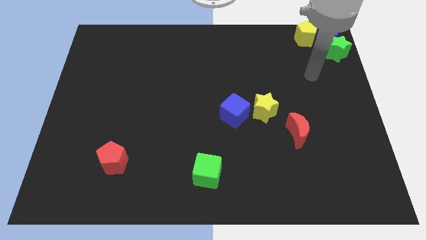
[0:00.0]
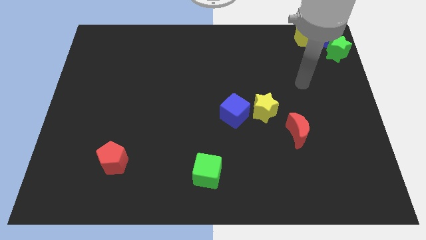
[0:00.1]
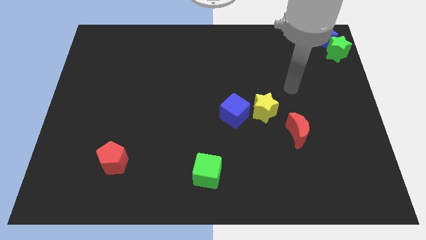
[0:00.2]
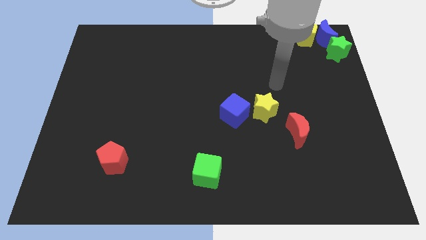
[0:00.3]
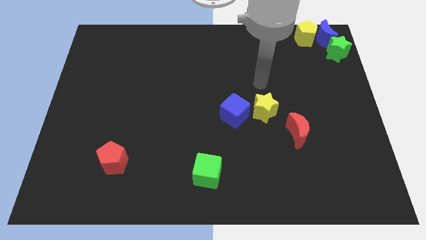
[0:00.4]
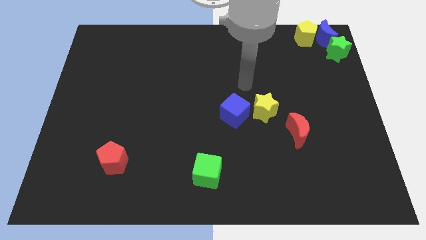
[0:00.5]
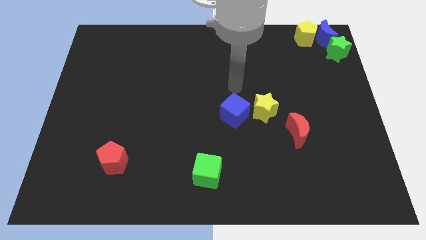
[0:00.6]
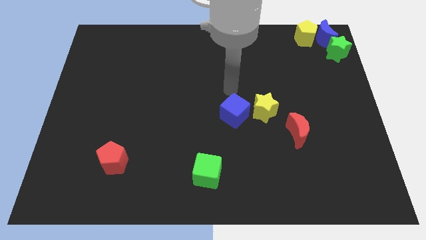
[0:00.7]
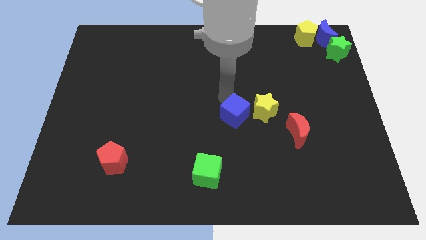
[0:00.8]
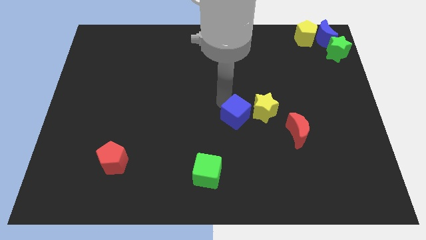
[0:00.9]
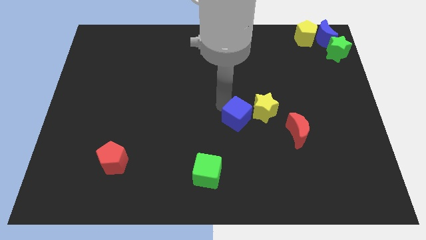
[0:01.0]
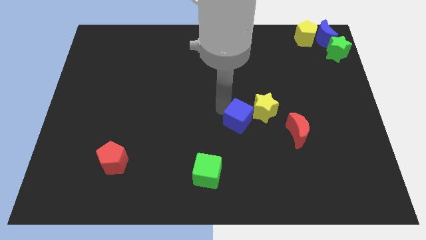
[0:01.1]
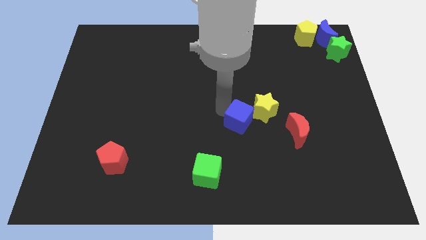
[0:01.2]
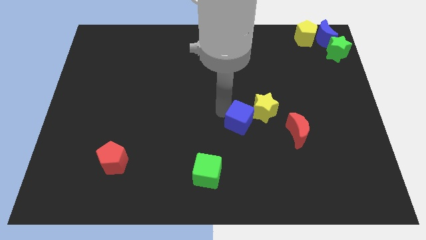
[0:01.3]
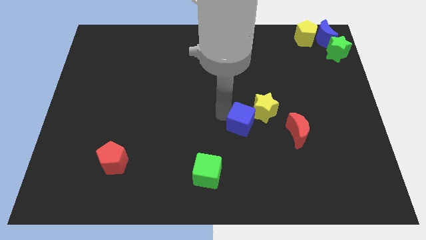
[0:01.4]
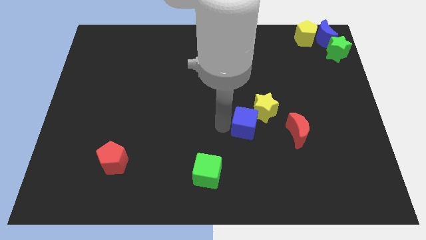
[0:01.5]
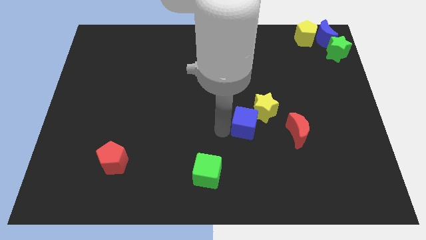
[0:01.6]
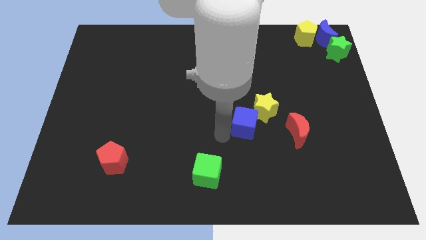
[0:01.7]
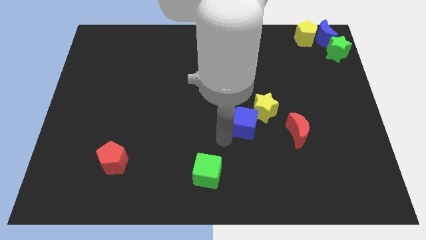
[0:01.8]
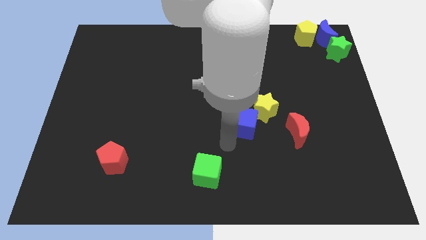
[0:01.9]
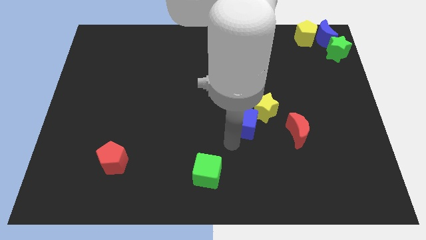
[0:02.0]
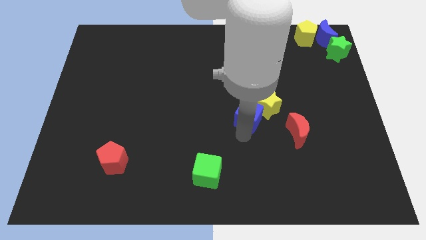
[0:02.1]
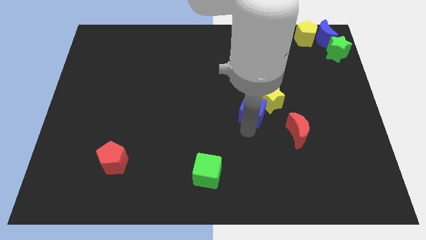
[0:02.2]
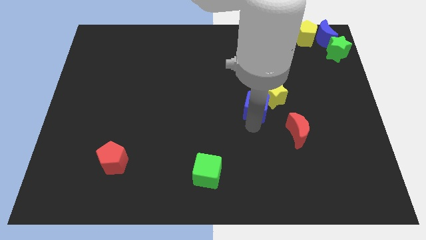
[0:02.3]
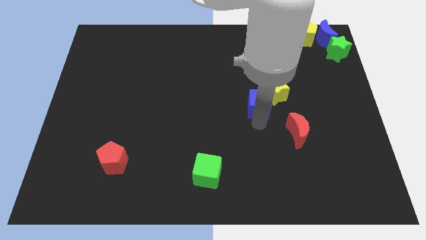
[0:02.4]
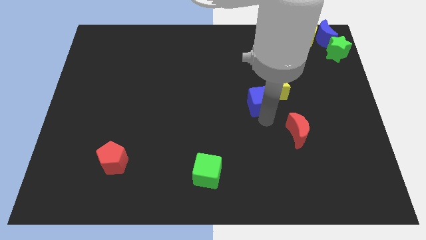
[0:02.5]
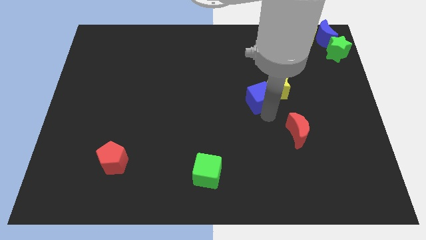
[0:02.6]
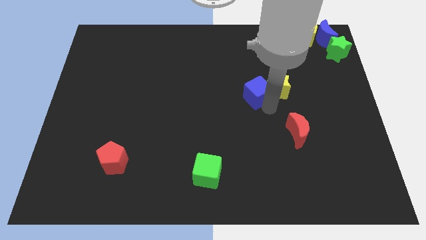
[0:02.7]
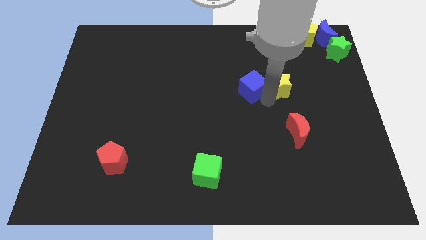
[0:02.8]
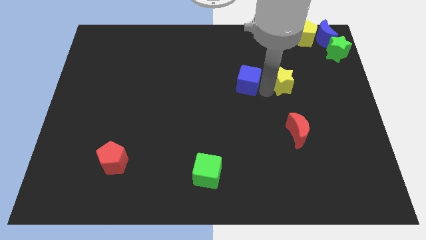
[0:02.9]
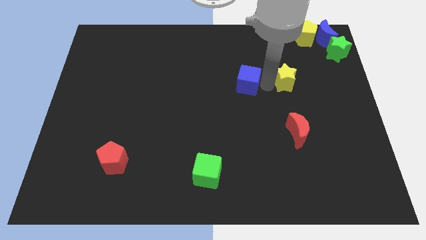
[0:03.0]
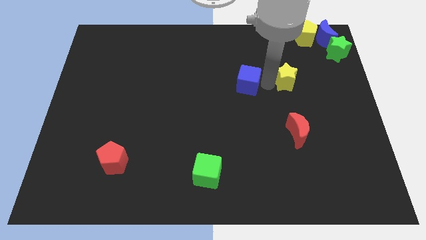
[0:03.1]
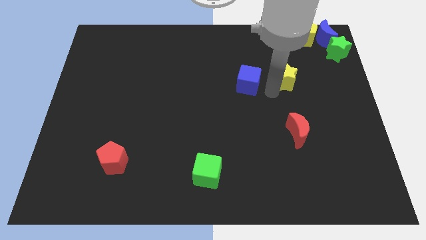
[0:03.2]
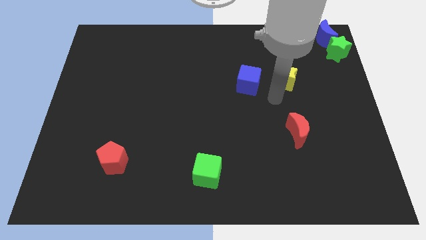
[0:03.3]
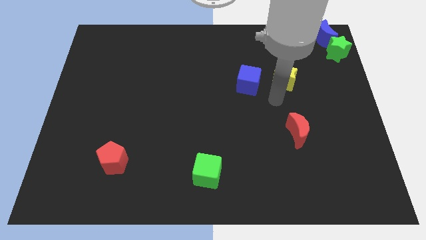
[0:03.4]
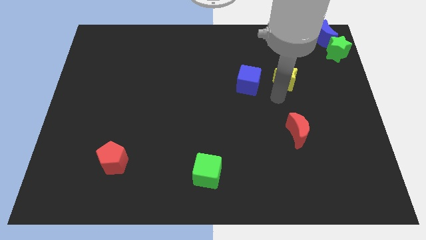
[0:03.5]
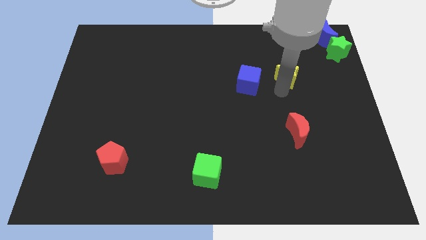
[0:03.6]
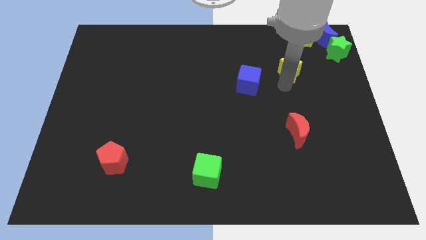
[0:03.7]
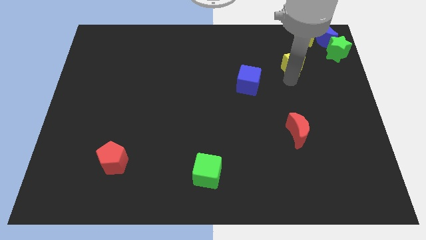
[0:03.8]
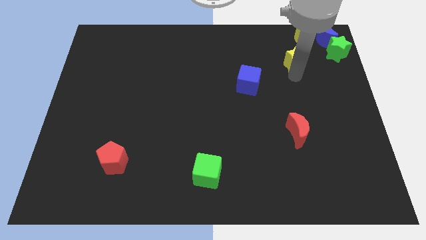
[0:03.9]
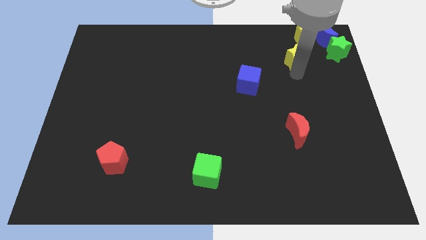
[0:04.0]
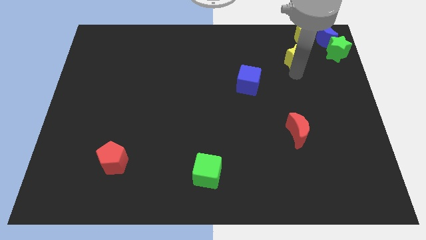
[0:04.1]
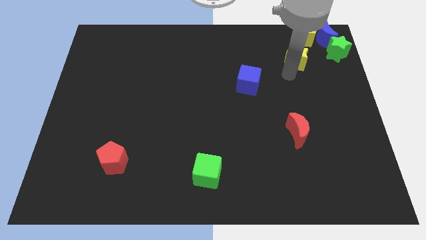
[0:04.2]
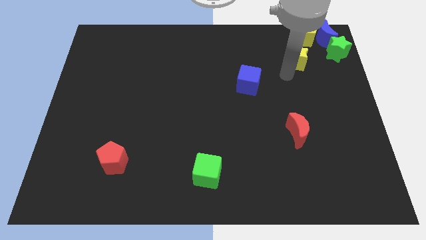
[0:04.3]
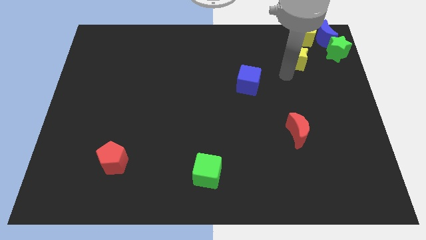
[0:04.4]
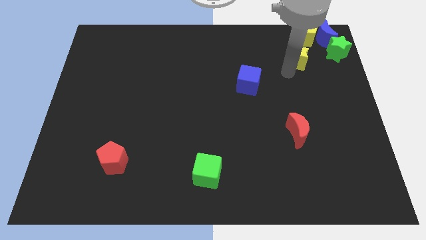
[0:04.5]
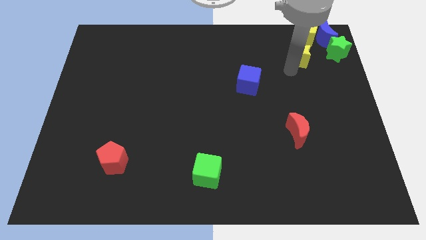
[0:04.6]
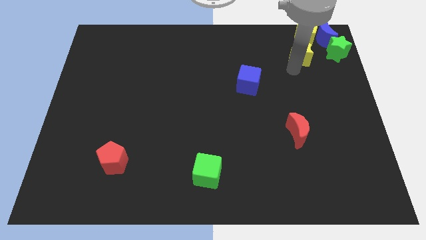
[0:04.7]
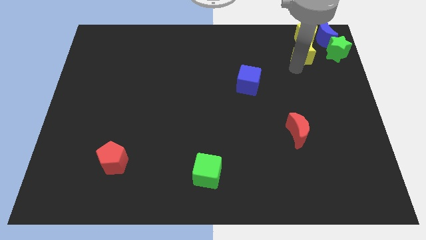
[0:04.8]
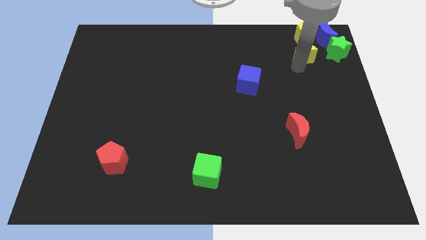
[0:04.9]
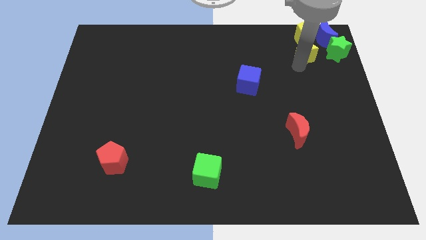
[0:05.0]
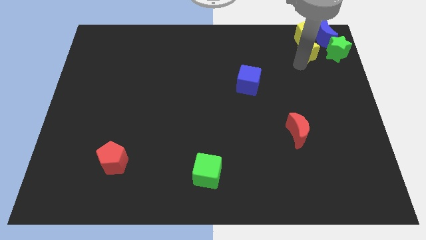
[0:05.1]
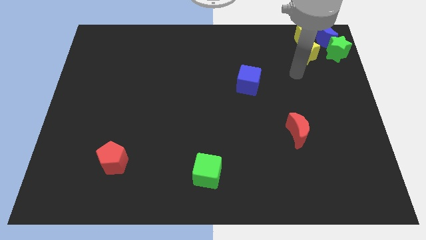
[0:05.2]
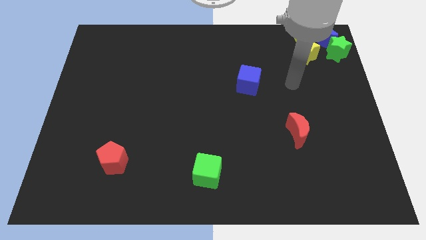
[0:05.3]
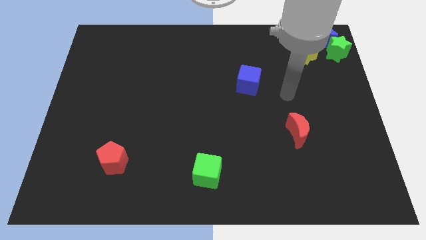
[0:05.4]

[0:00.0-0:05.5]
place the yellow star below the yellow pentagon

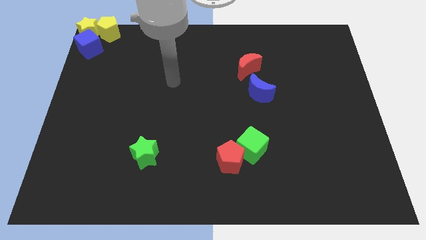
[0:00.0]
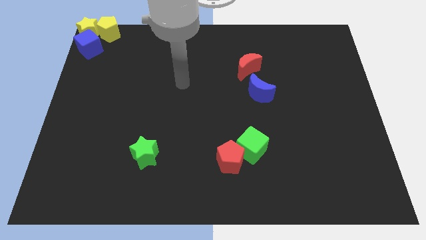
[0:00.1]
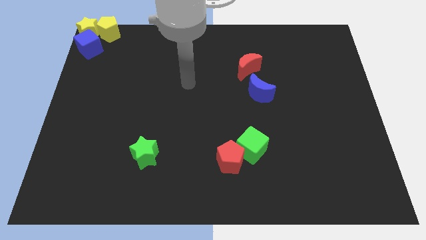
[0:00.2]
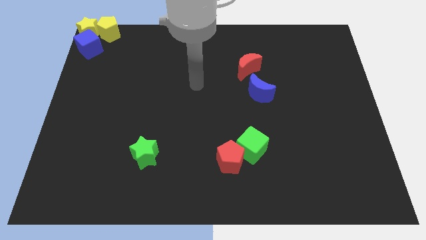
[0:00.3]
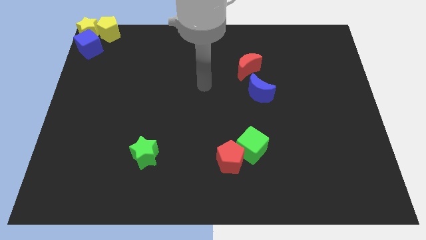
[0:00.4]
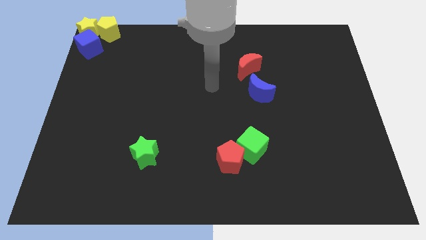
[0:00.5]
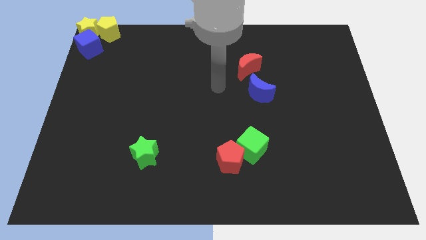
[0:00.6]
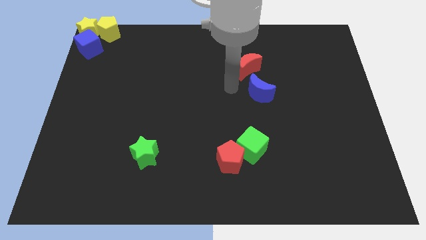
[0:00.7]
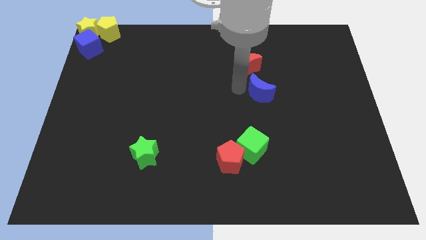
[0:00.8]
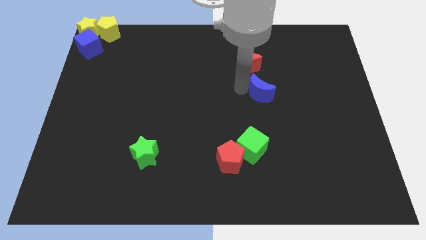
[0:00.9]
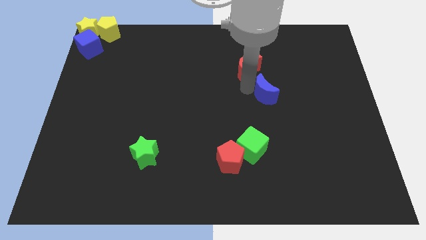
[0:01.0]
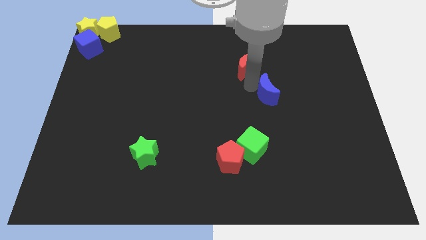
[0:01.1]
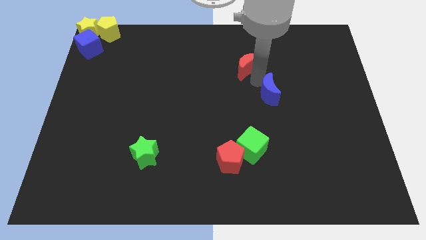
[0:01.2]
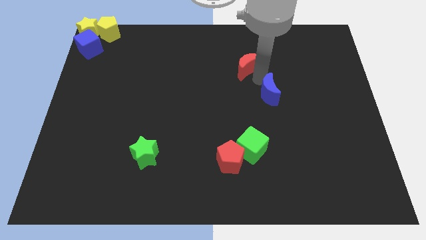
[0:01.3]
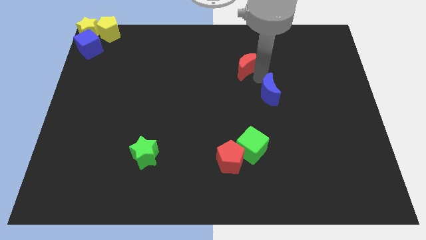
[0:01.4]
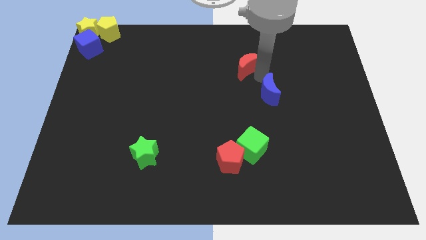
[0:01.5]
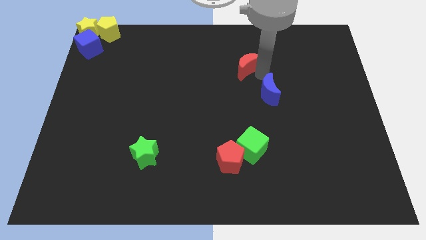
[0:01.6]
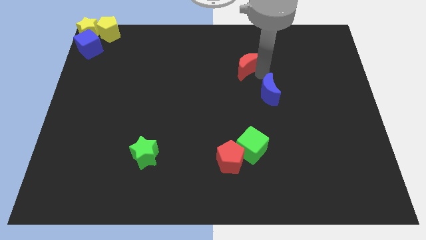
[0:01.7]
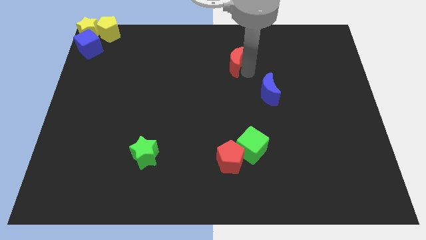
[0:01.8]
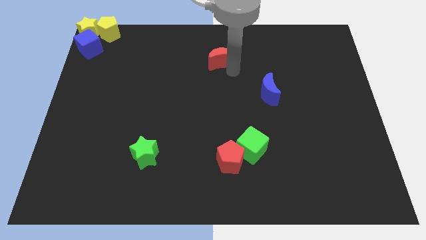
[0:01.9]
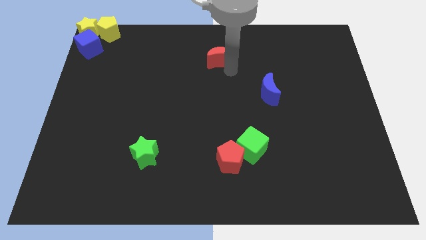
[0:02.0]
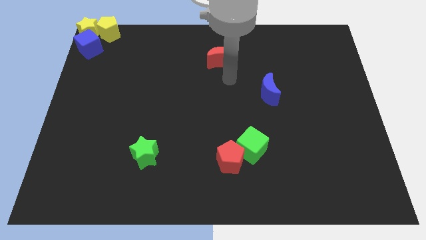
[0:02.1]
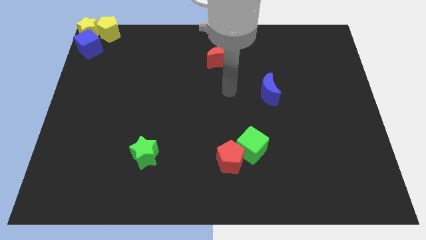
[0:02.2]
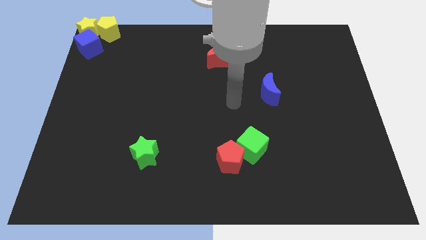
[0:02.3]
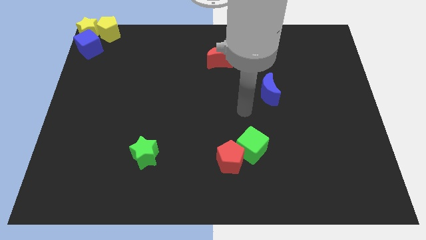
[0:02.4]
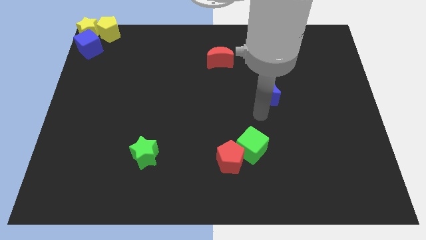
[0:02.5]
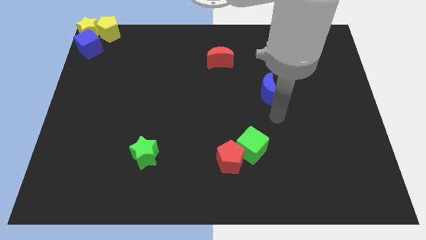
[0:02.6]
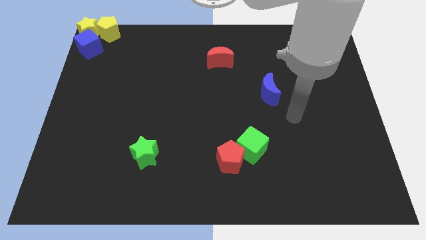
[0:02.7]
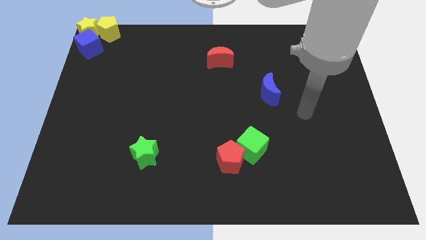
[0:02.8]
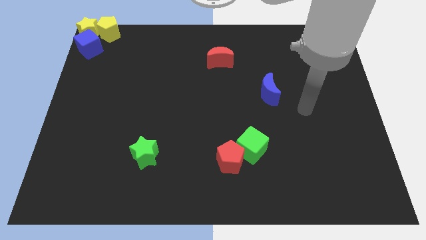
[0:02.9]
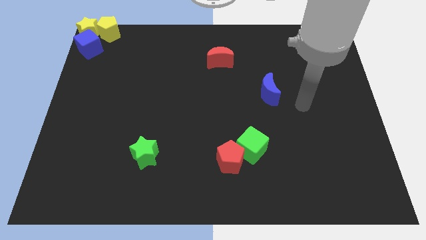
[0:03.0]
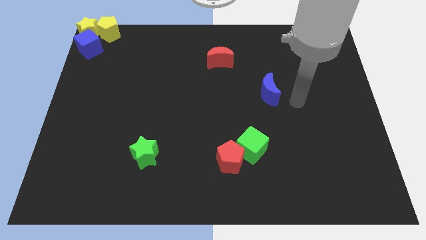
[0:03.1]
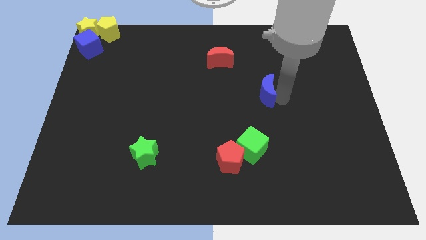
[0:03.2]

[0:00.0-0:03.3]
place the arm right to the blue moon

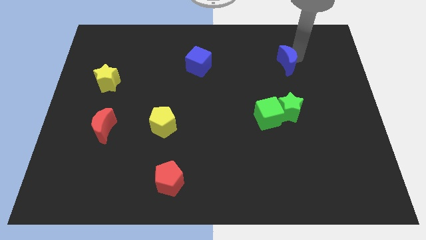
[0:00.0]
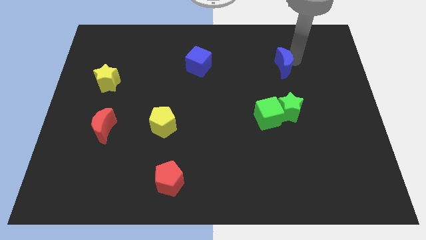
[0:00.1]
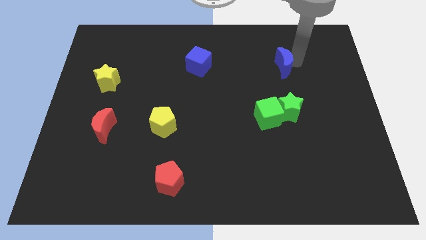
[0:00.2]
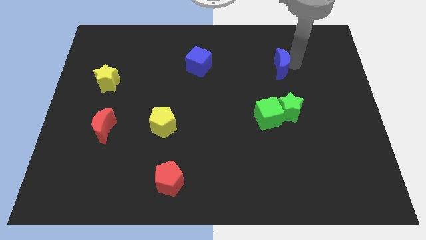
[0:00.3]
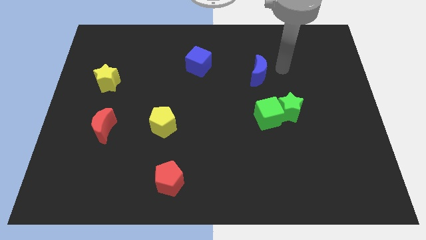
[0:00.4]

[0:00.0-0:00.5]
push blue crescent above green cube
